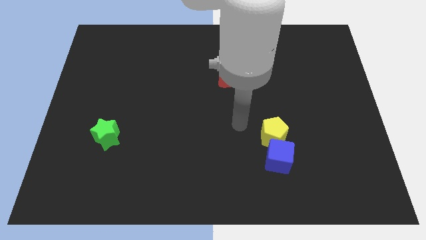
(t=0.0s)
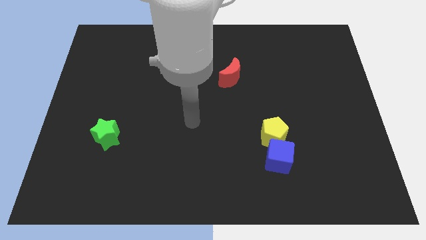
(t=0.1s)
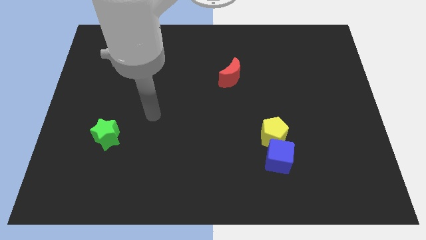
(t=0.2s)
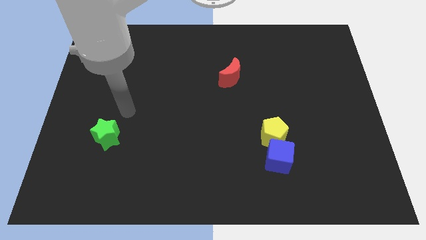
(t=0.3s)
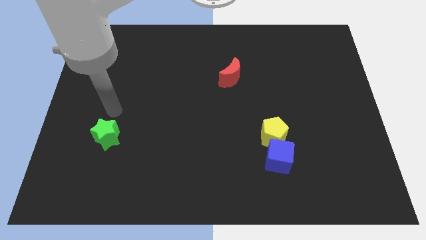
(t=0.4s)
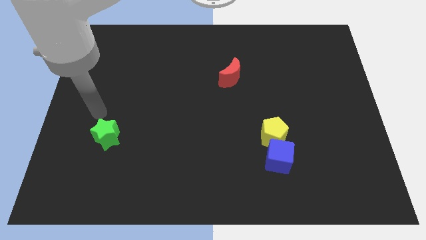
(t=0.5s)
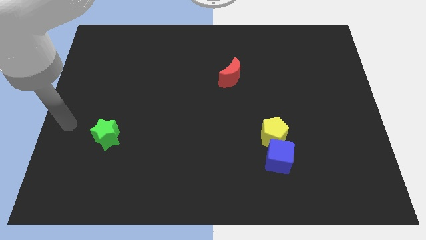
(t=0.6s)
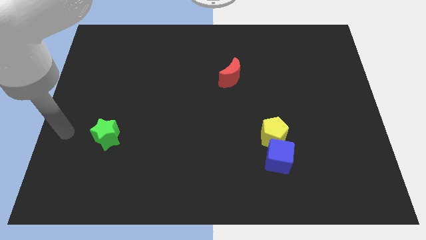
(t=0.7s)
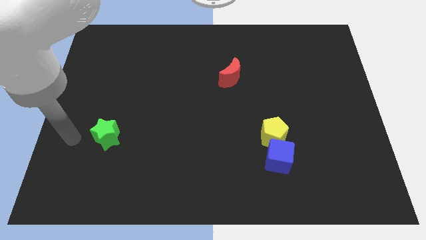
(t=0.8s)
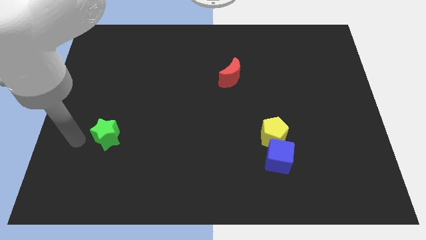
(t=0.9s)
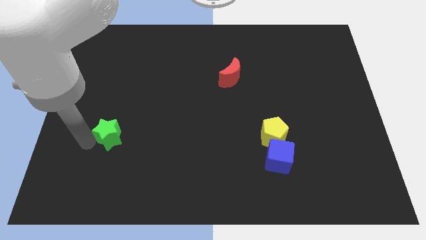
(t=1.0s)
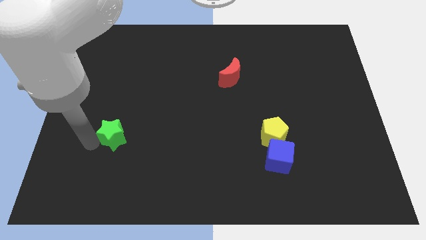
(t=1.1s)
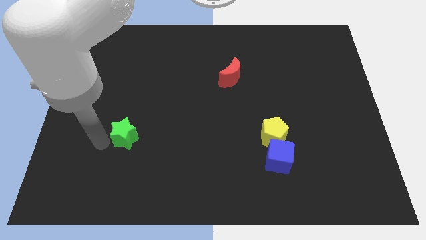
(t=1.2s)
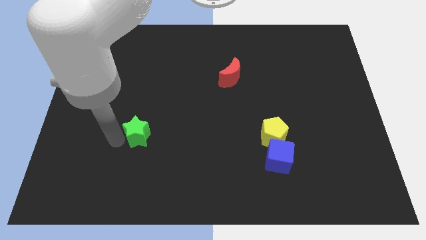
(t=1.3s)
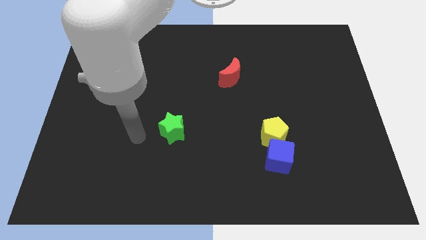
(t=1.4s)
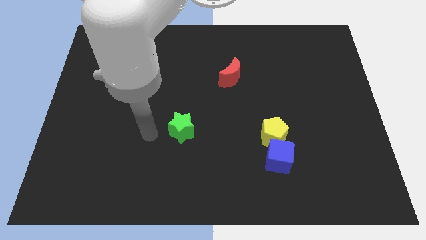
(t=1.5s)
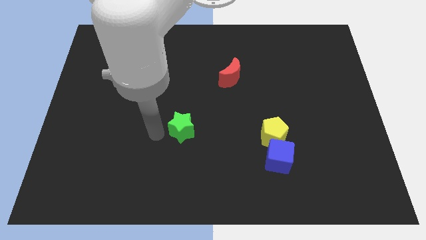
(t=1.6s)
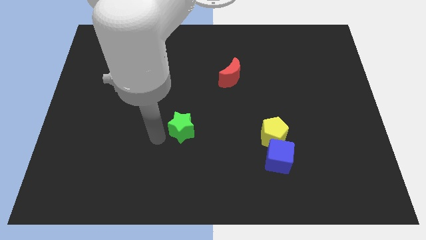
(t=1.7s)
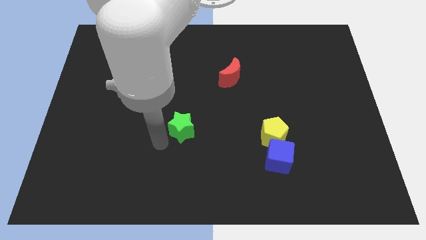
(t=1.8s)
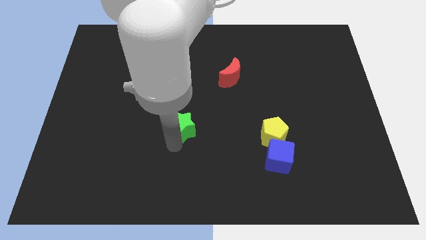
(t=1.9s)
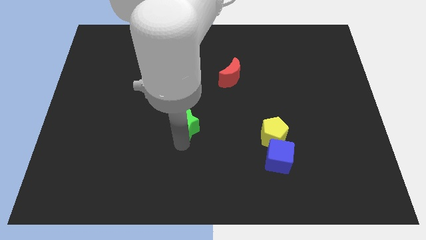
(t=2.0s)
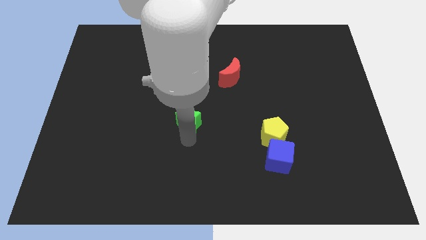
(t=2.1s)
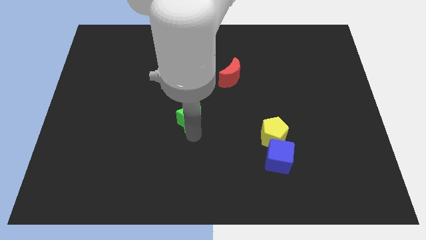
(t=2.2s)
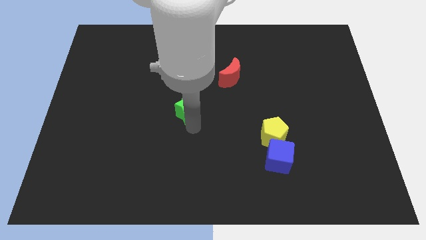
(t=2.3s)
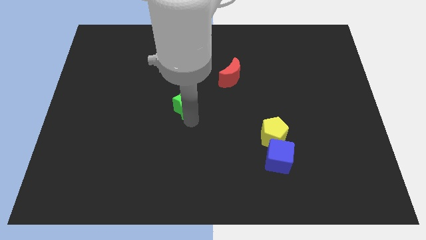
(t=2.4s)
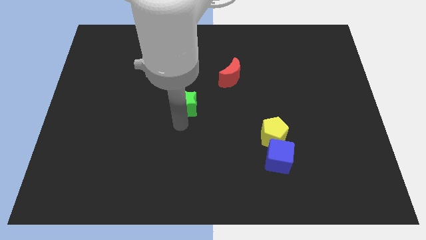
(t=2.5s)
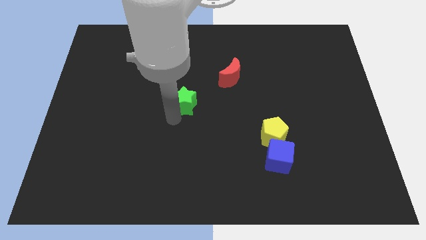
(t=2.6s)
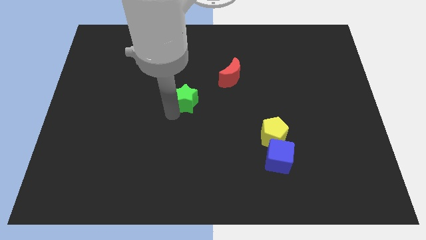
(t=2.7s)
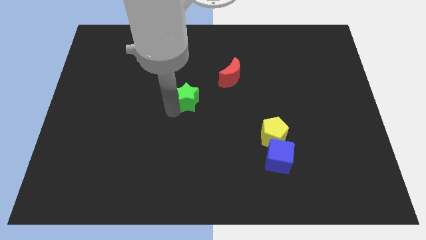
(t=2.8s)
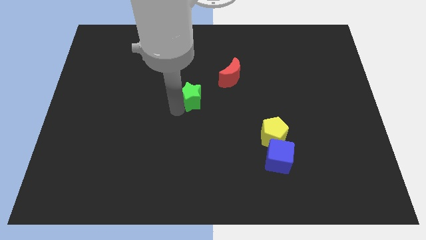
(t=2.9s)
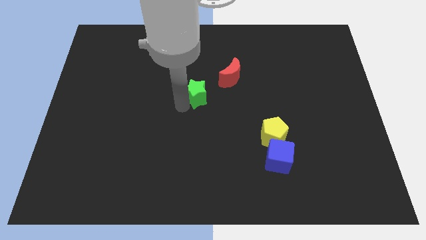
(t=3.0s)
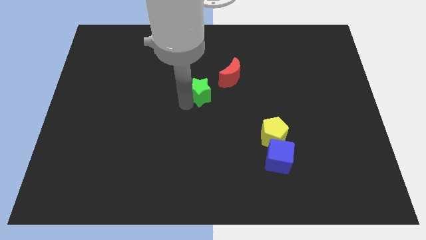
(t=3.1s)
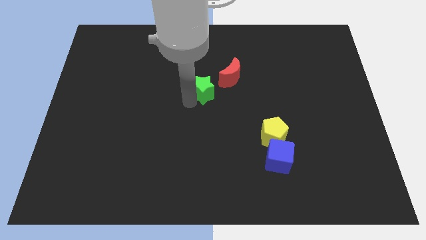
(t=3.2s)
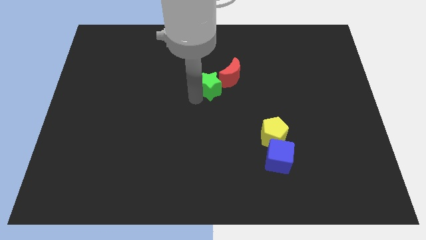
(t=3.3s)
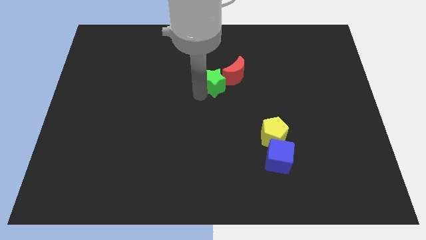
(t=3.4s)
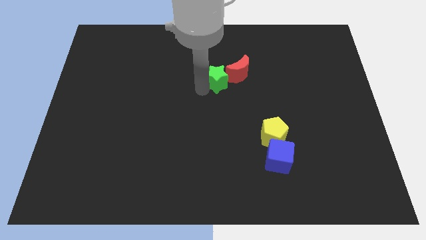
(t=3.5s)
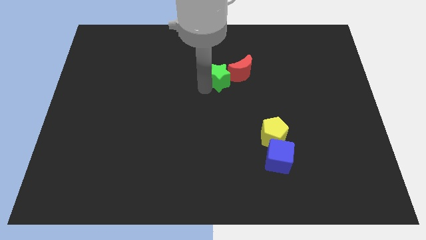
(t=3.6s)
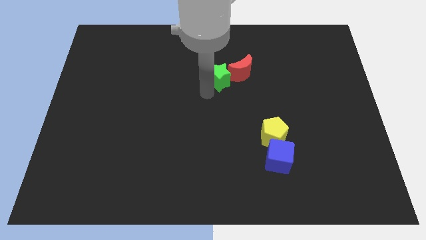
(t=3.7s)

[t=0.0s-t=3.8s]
move the green block towards the moon

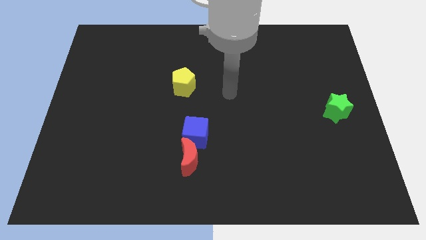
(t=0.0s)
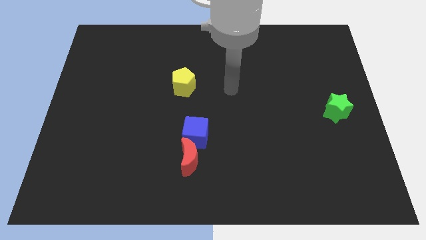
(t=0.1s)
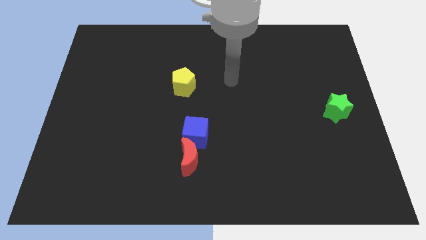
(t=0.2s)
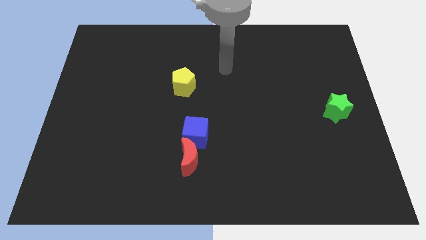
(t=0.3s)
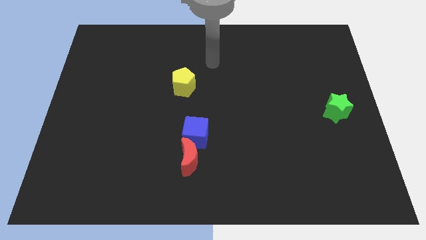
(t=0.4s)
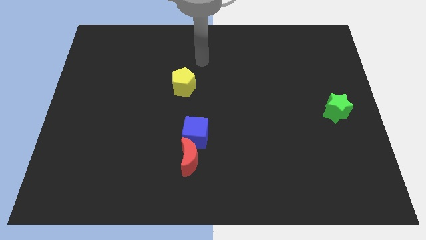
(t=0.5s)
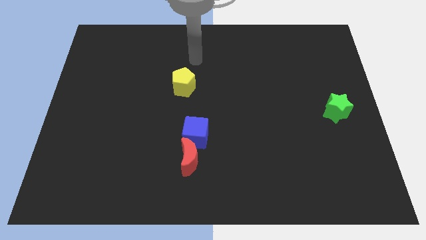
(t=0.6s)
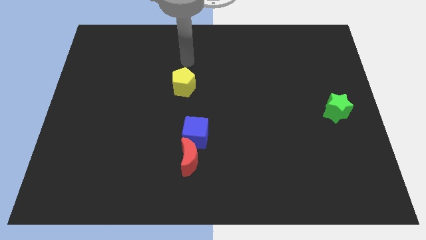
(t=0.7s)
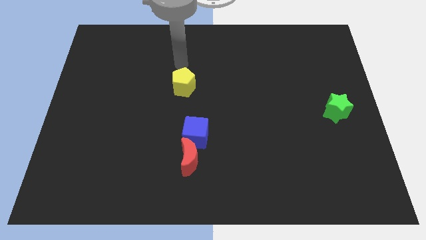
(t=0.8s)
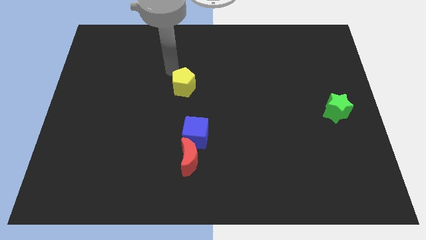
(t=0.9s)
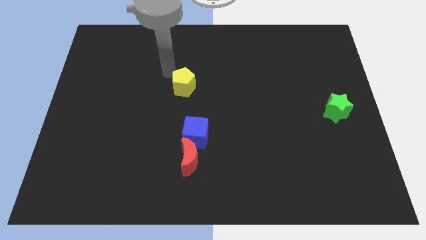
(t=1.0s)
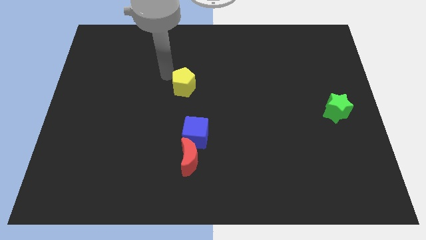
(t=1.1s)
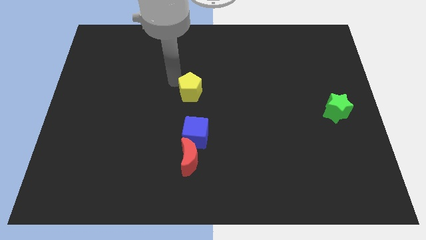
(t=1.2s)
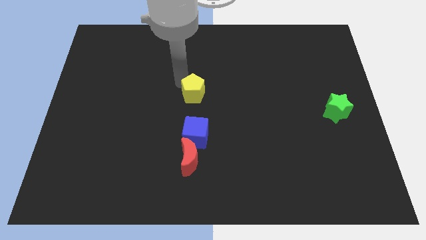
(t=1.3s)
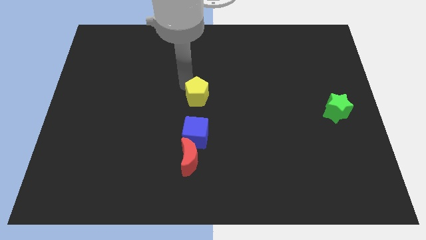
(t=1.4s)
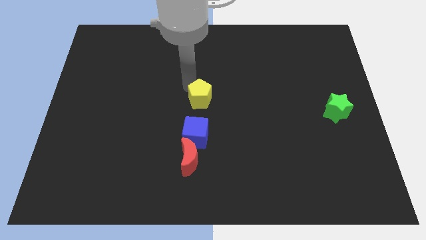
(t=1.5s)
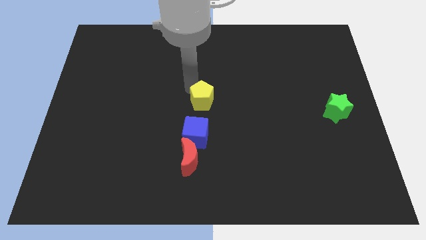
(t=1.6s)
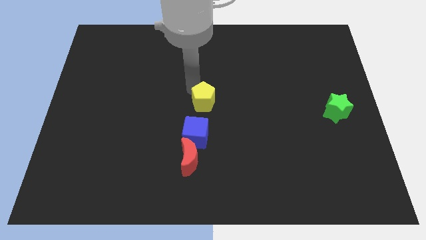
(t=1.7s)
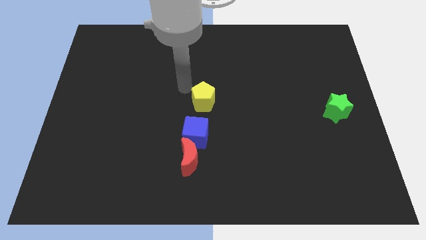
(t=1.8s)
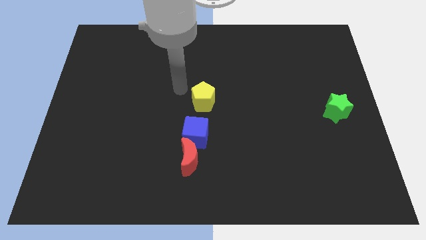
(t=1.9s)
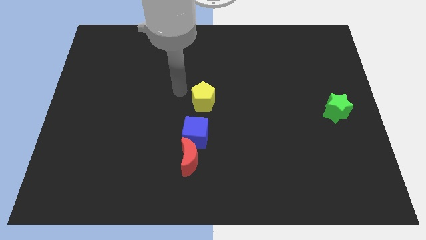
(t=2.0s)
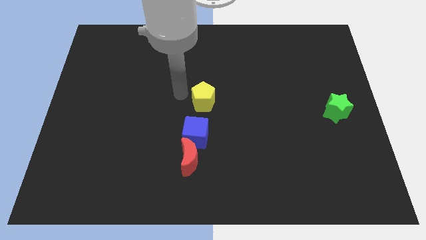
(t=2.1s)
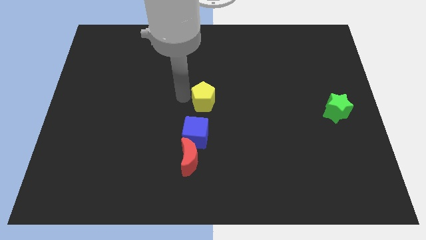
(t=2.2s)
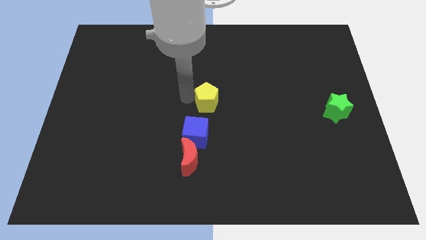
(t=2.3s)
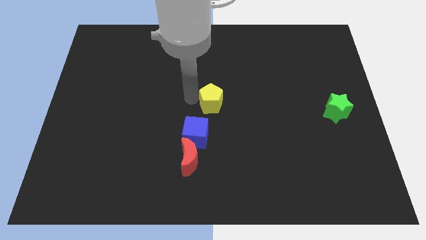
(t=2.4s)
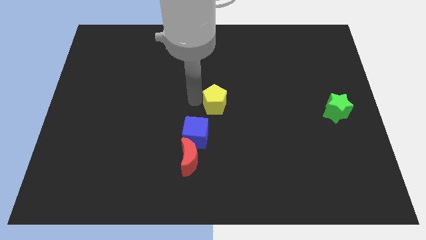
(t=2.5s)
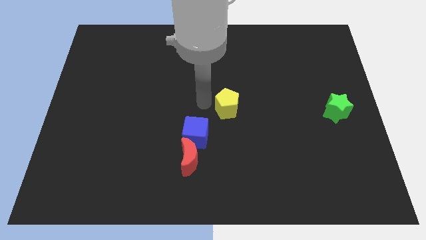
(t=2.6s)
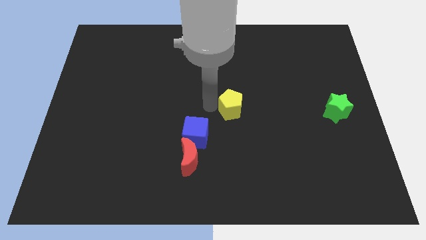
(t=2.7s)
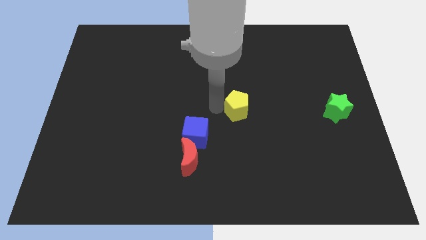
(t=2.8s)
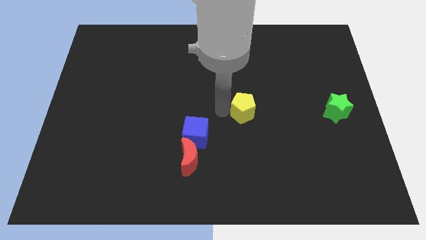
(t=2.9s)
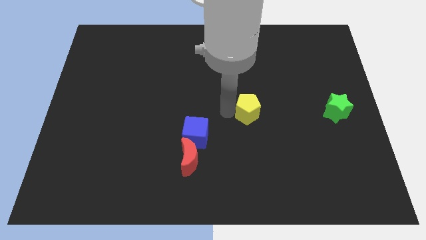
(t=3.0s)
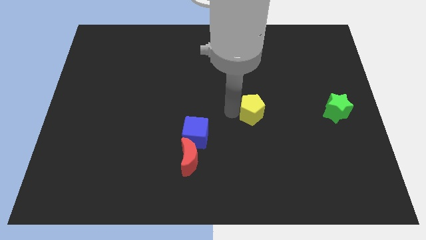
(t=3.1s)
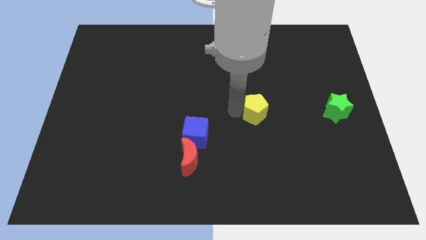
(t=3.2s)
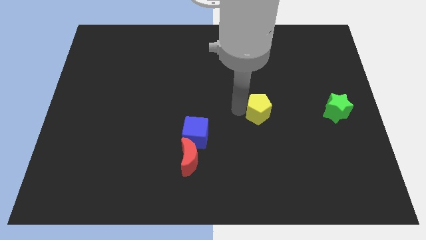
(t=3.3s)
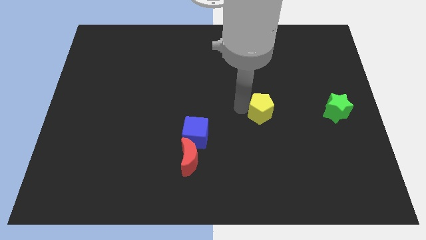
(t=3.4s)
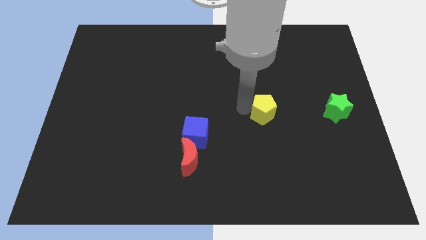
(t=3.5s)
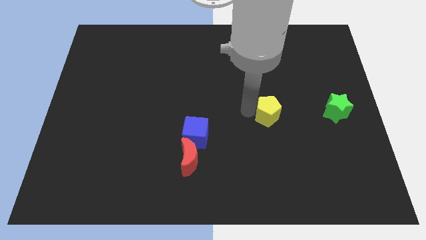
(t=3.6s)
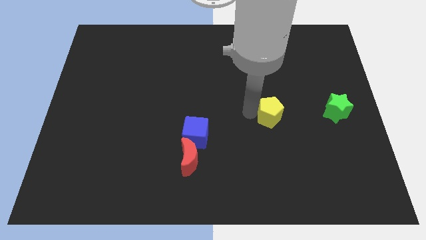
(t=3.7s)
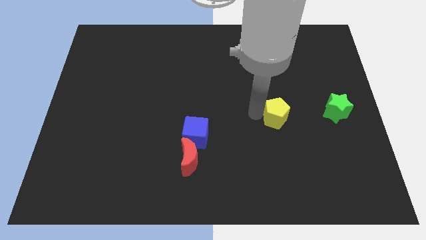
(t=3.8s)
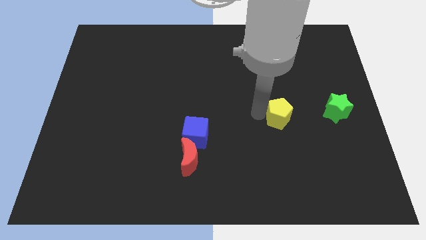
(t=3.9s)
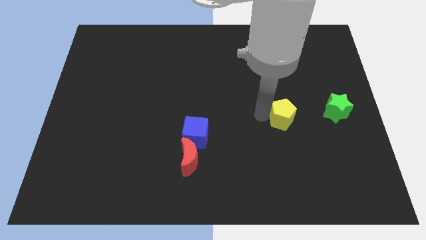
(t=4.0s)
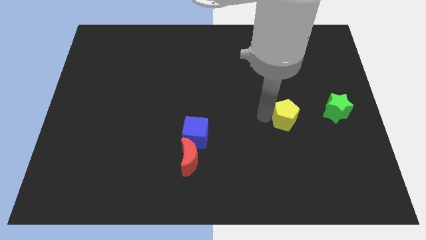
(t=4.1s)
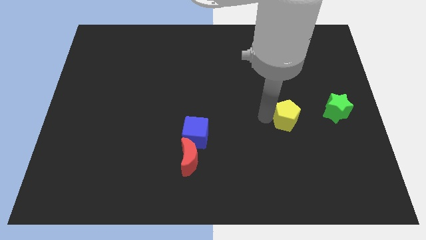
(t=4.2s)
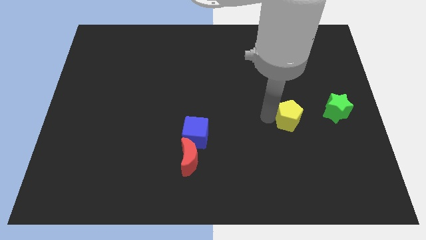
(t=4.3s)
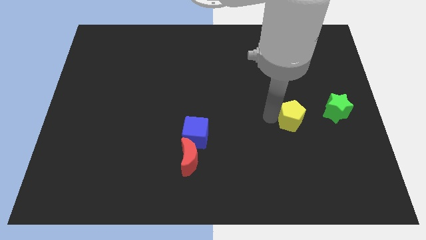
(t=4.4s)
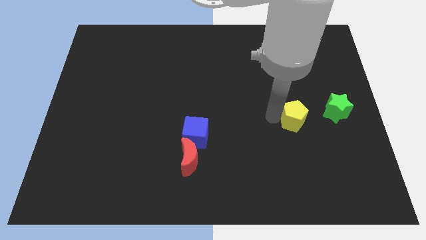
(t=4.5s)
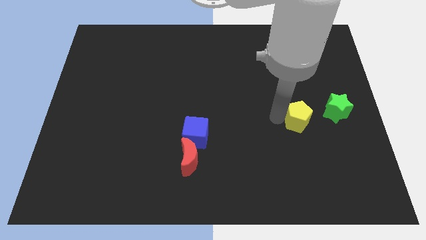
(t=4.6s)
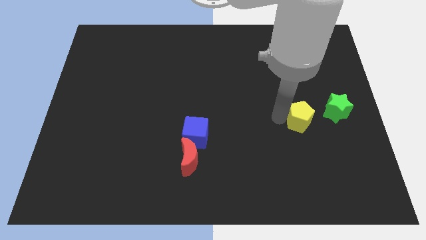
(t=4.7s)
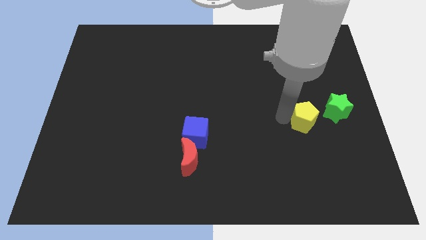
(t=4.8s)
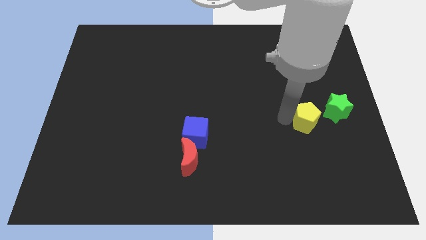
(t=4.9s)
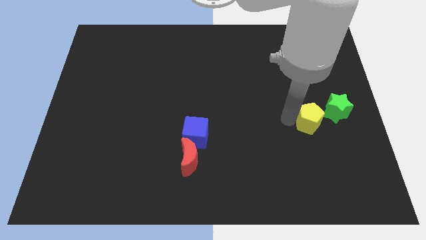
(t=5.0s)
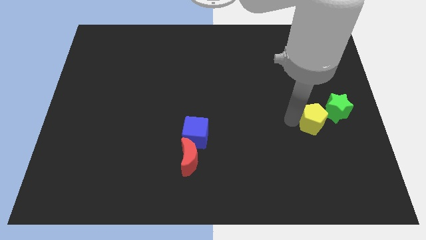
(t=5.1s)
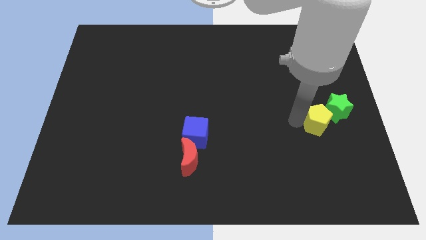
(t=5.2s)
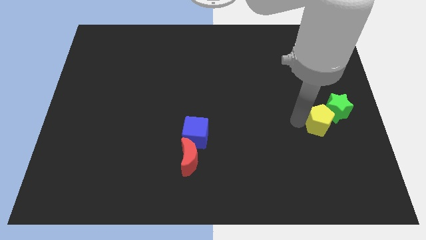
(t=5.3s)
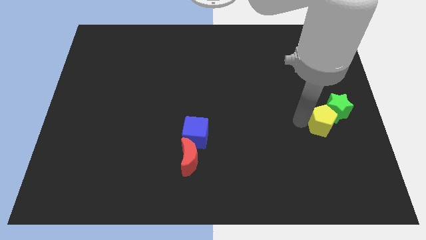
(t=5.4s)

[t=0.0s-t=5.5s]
put the yellow pentagon to the green block
